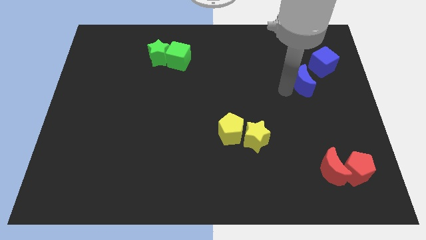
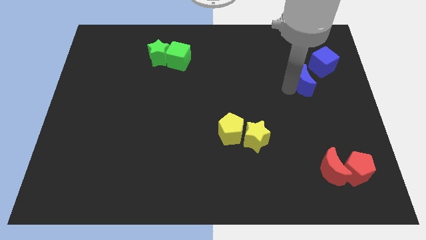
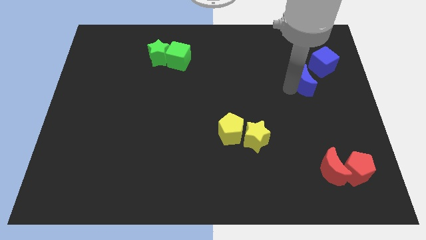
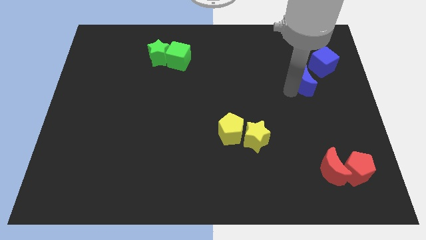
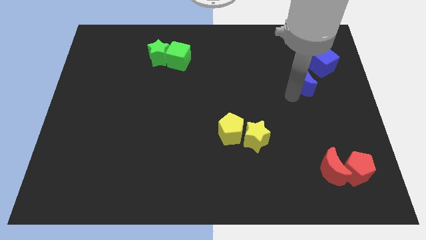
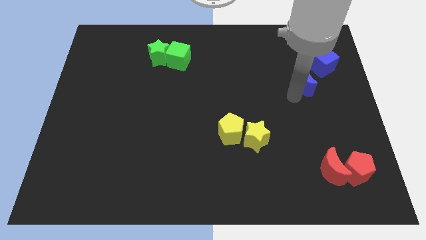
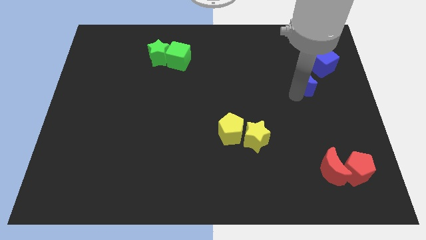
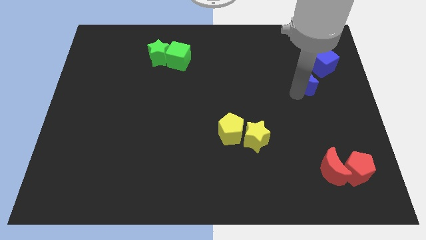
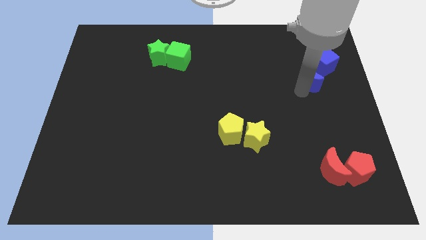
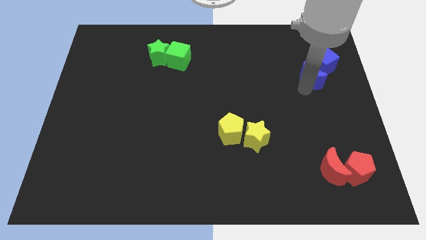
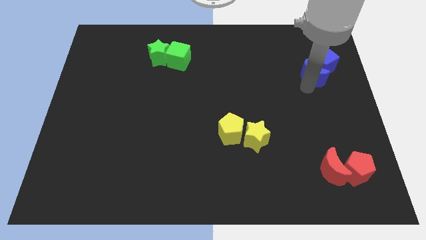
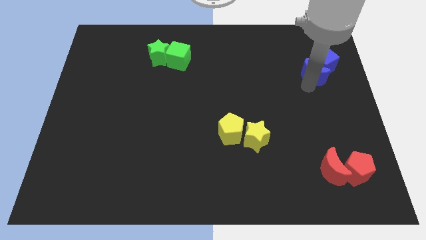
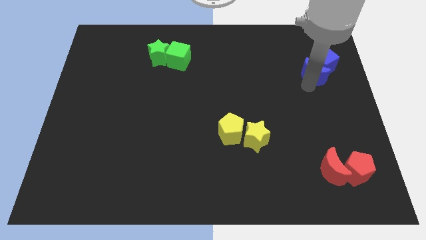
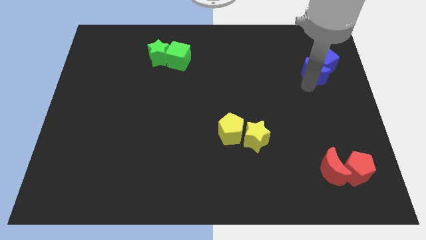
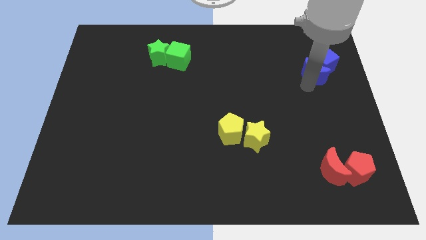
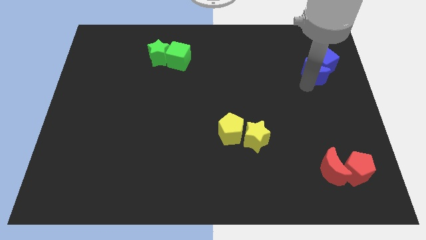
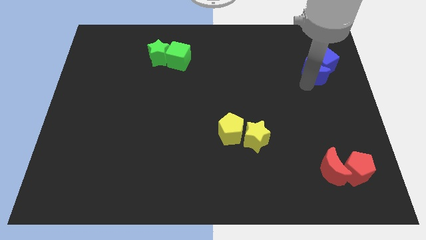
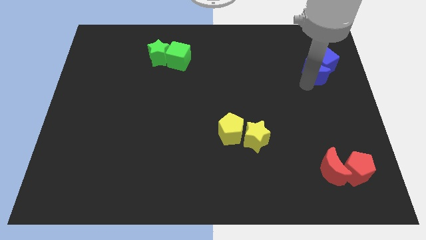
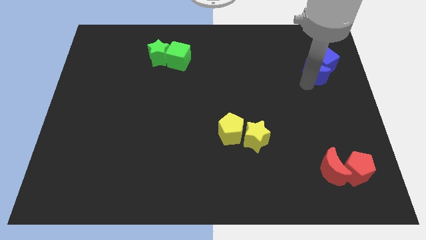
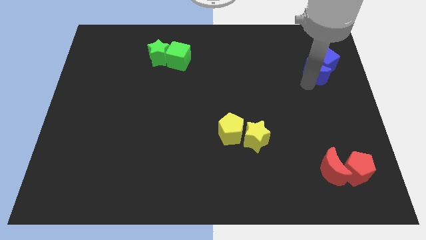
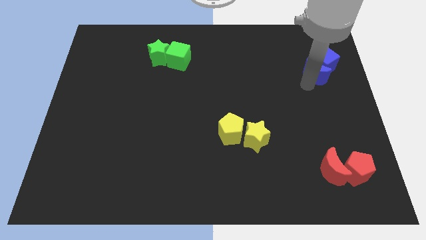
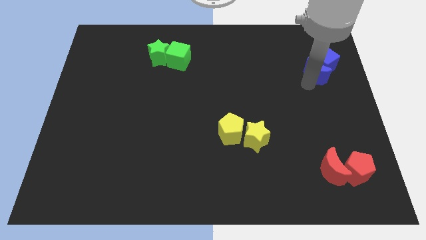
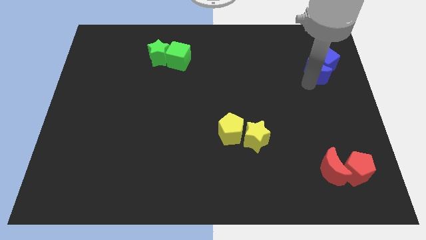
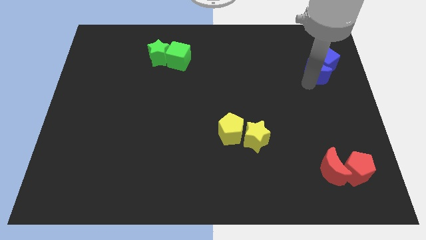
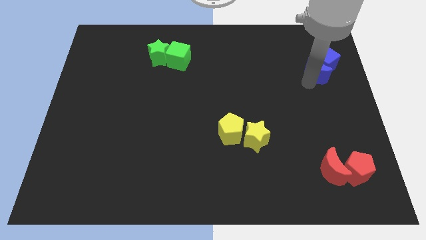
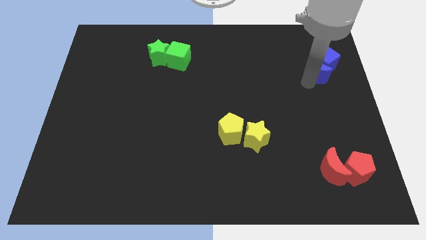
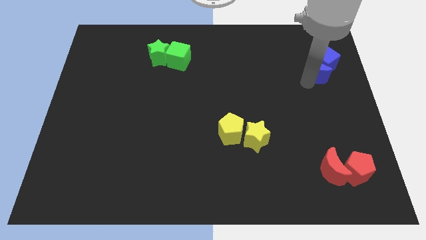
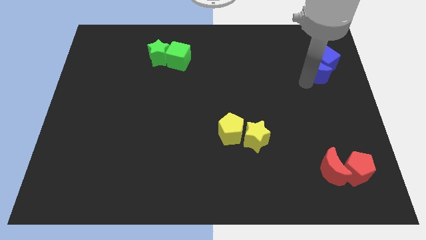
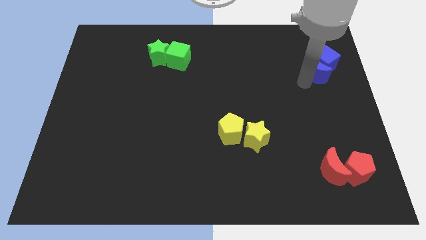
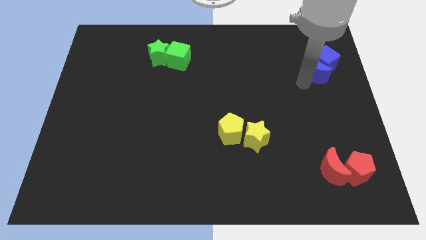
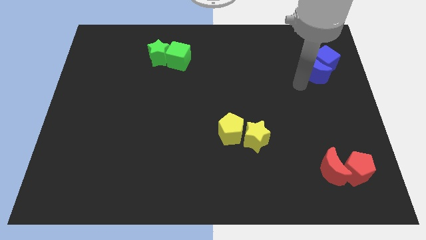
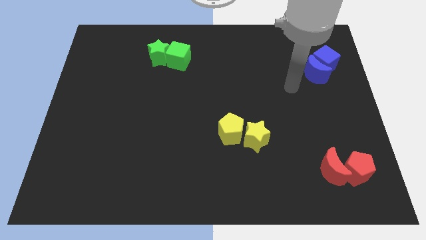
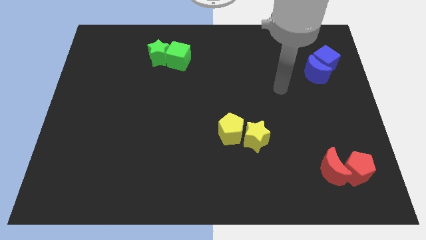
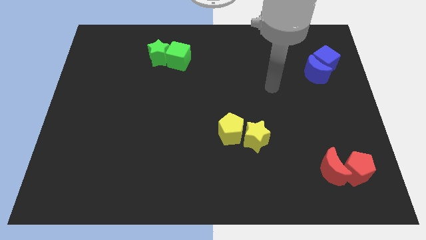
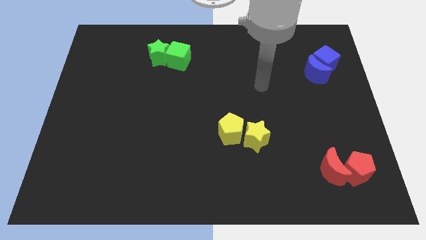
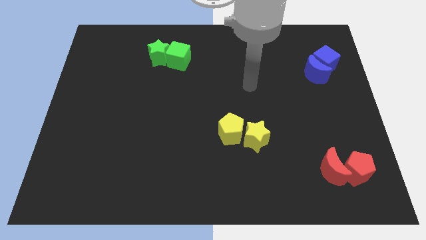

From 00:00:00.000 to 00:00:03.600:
slide the blue crescent into the blue cube

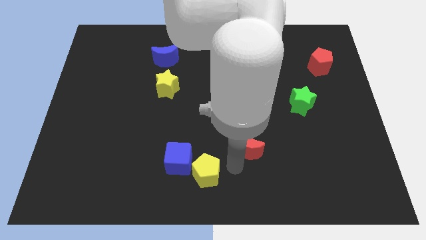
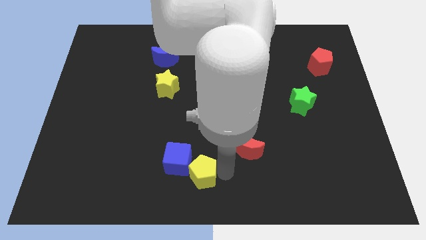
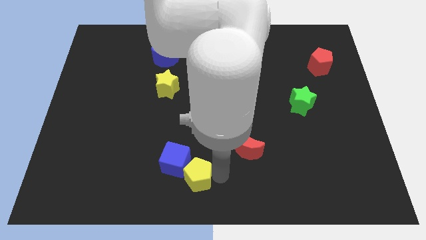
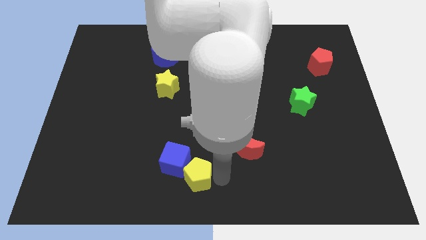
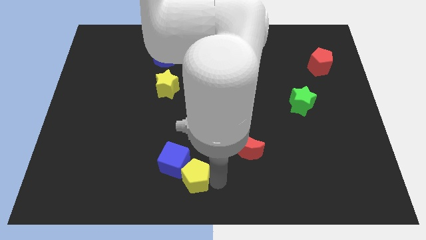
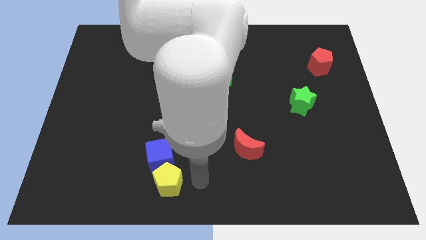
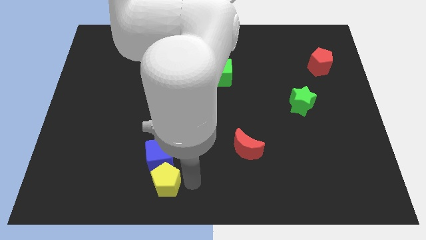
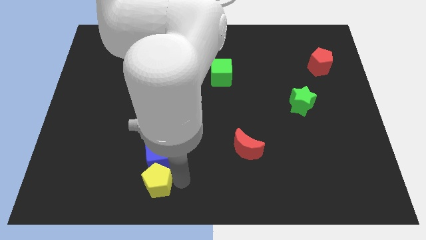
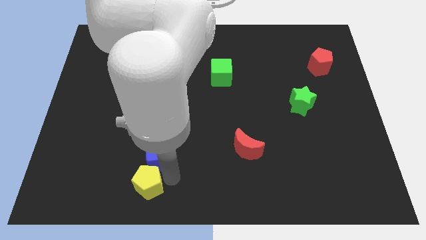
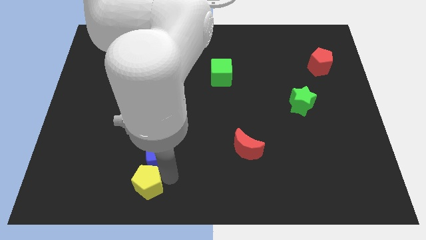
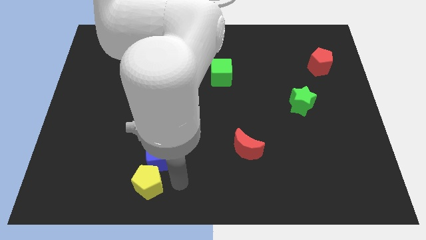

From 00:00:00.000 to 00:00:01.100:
slide the yellow pentagon and the blue cube to the left

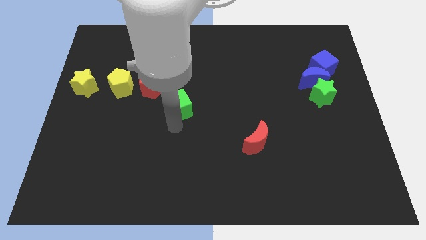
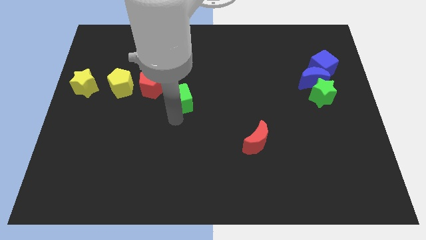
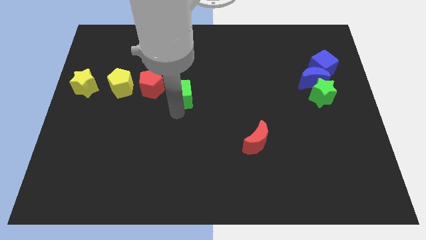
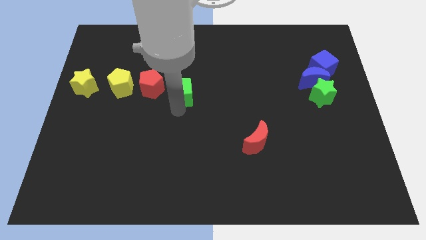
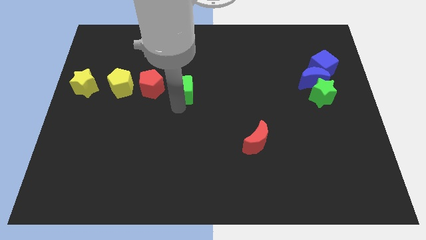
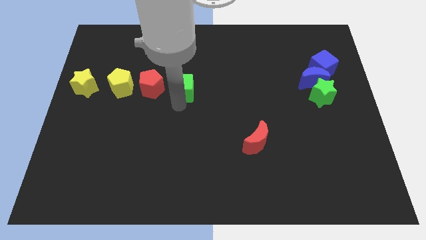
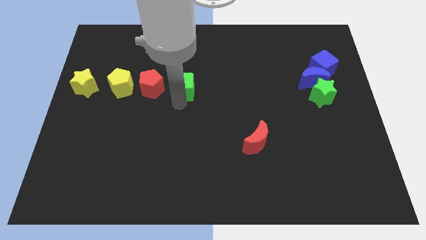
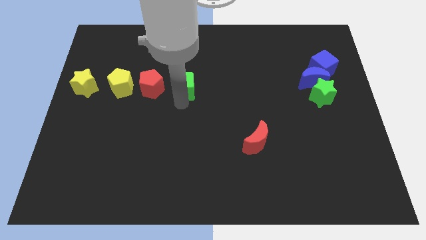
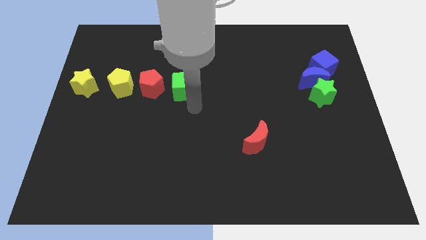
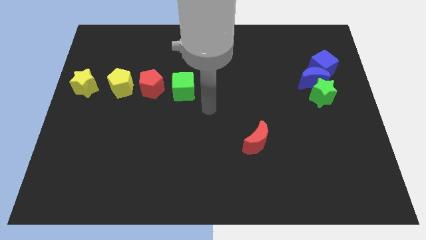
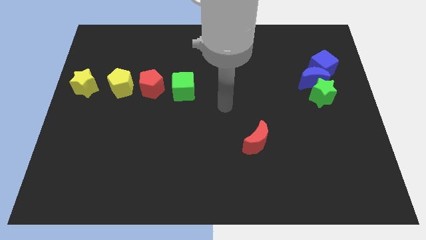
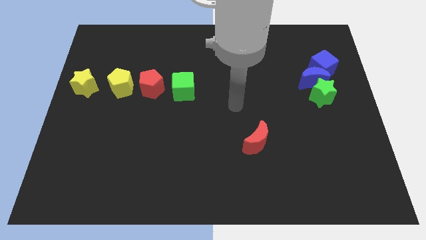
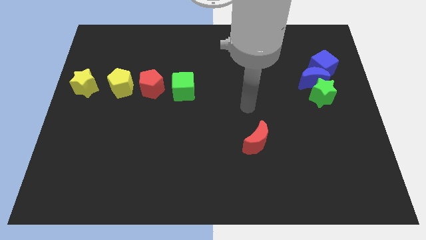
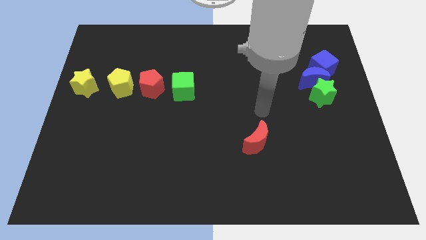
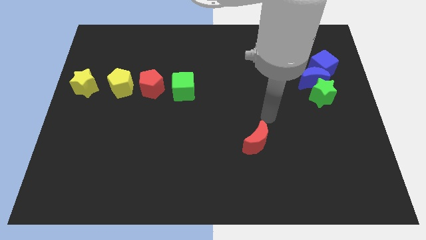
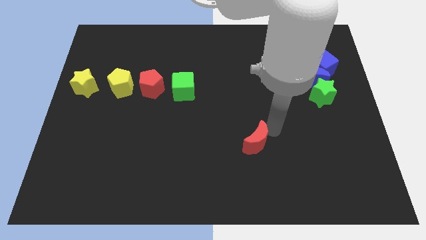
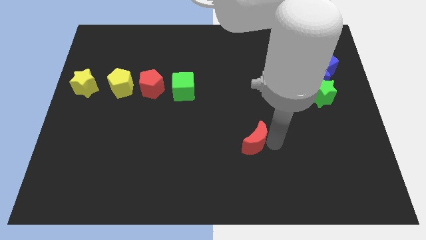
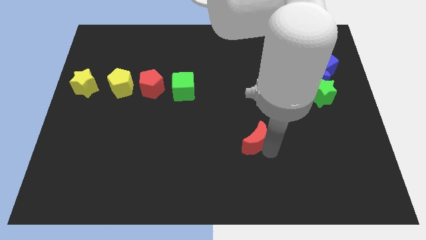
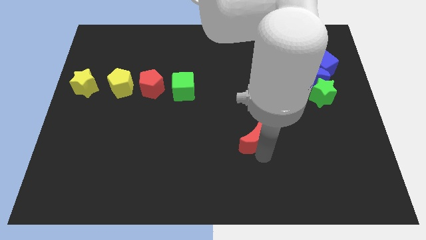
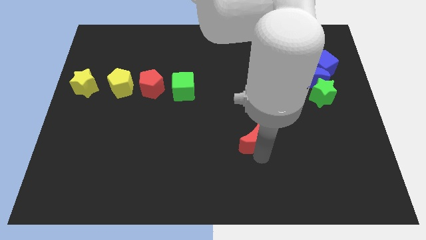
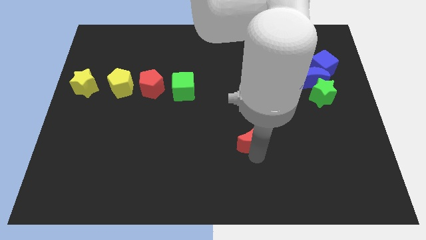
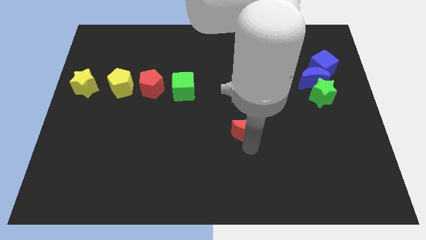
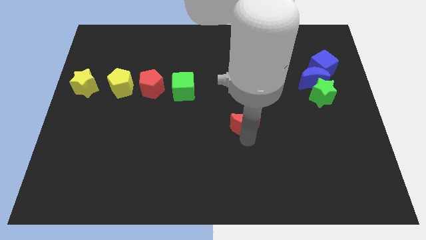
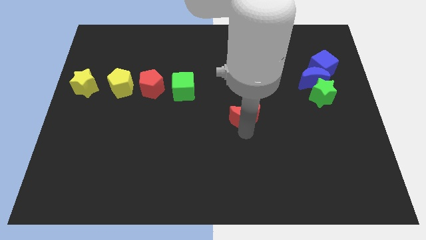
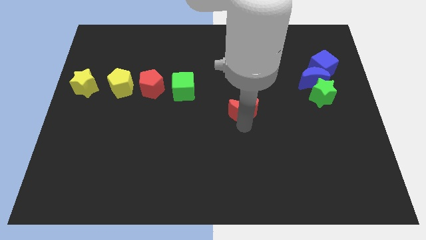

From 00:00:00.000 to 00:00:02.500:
push red crescent slightly towards upwards

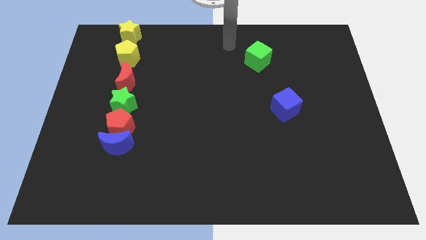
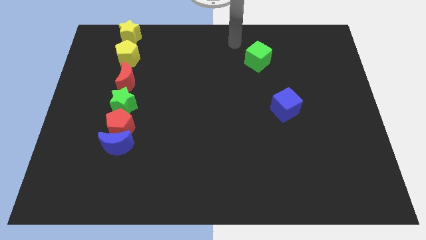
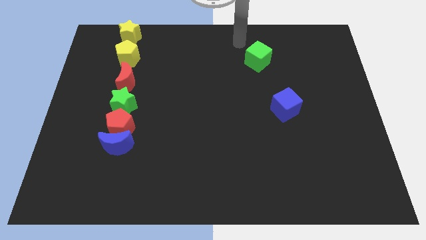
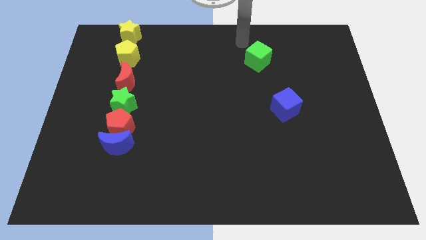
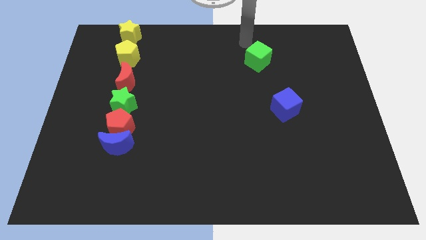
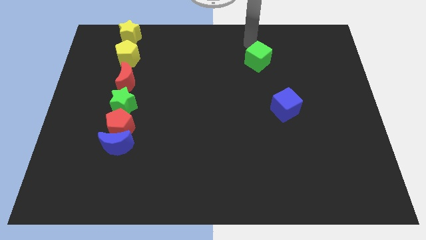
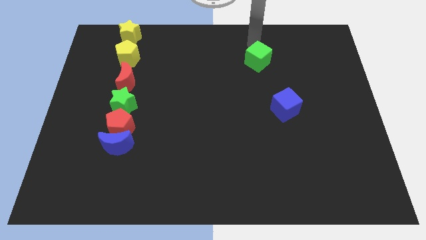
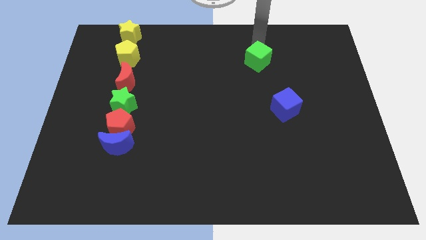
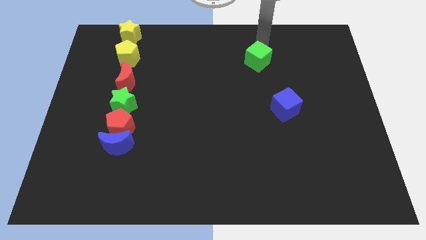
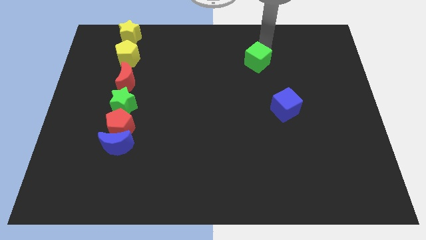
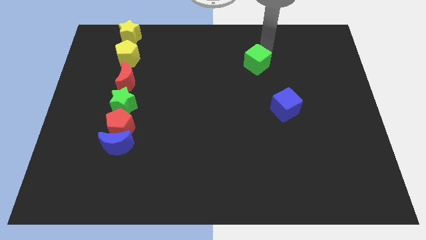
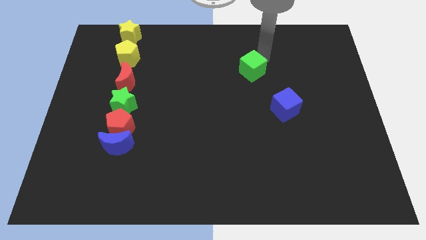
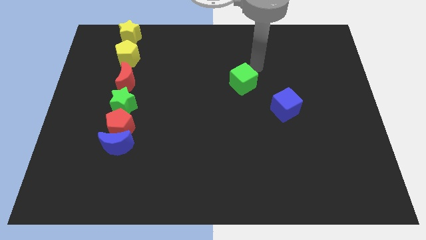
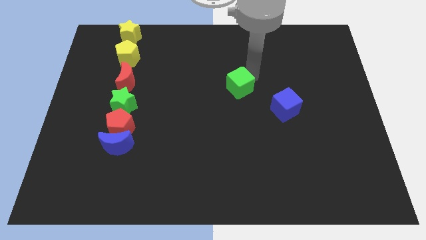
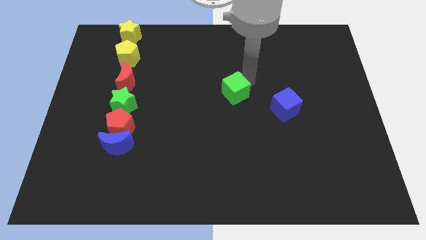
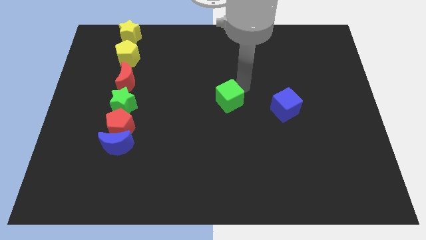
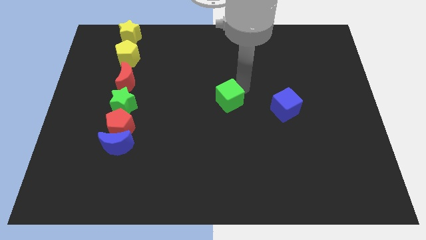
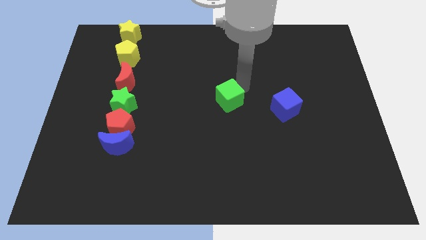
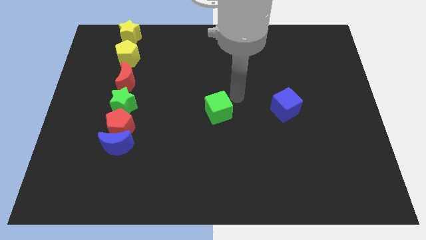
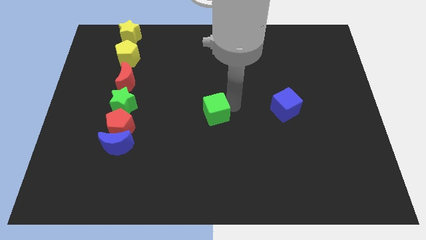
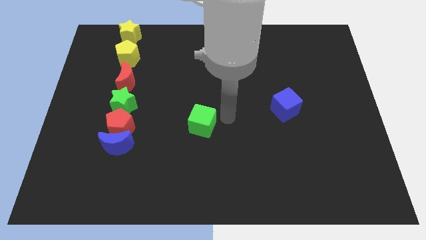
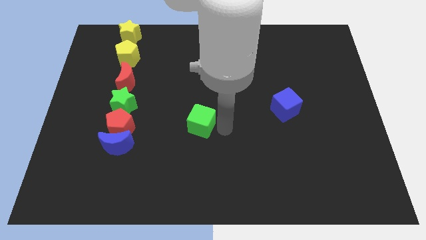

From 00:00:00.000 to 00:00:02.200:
push green cube to the right of red pentagon
